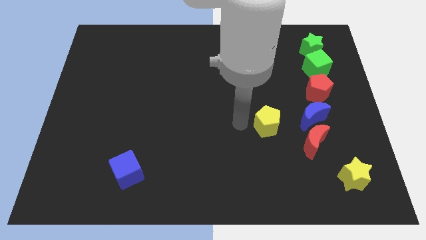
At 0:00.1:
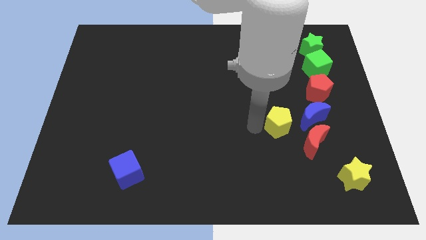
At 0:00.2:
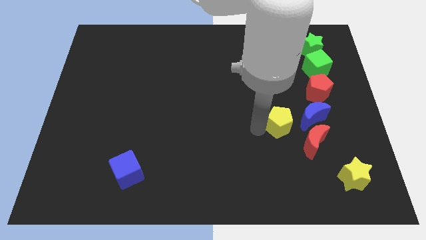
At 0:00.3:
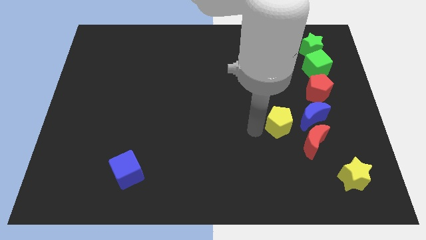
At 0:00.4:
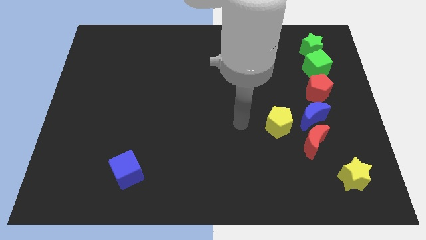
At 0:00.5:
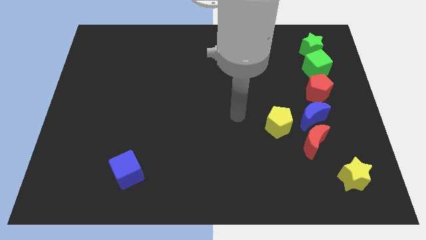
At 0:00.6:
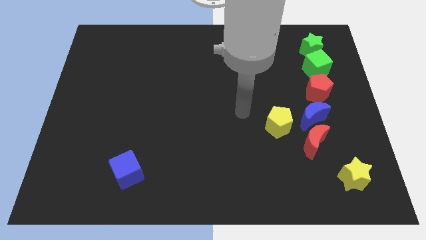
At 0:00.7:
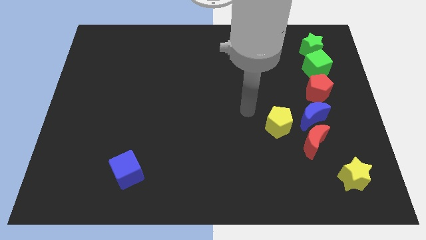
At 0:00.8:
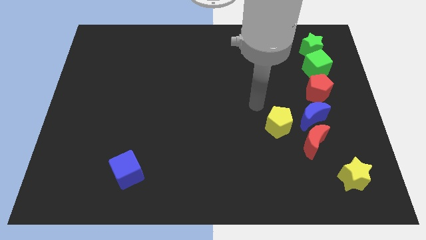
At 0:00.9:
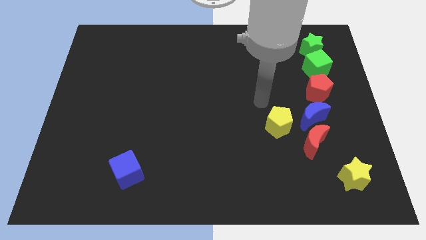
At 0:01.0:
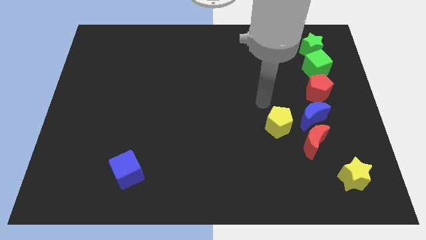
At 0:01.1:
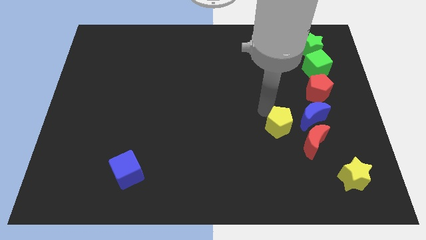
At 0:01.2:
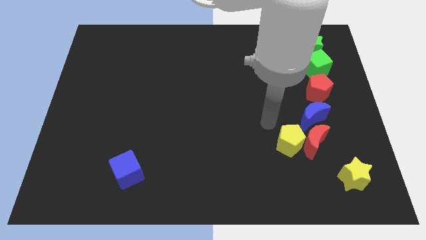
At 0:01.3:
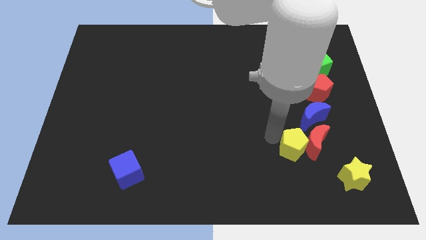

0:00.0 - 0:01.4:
move the yellow pentagon to the left of the red crescent

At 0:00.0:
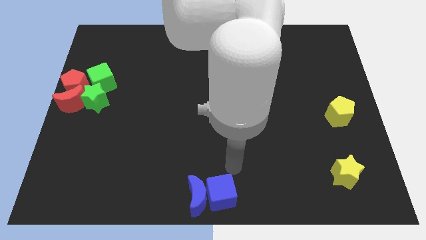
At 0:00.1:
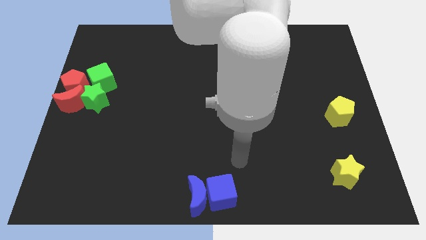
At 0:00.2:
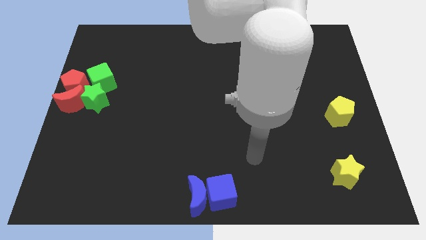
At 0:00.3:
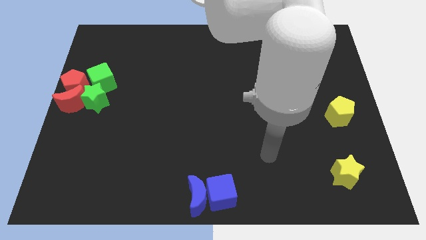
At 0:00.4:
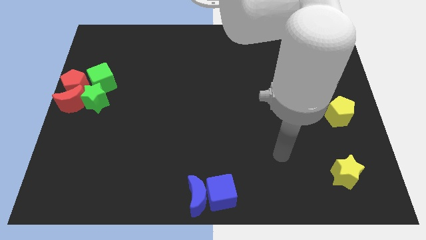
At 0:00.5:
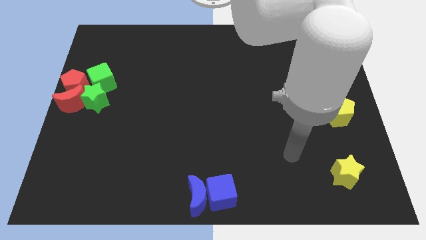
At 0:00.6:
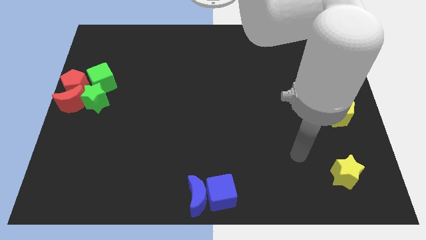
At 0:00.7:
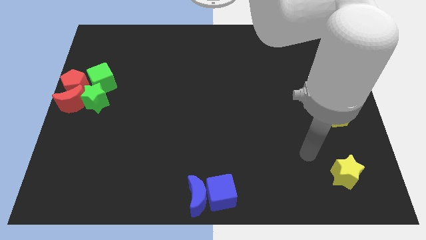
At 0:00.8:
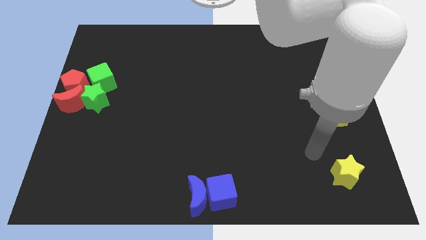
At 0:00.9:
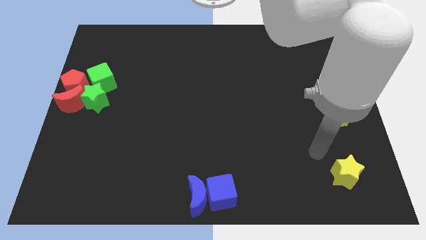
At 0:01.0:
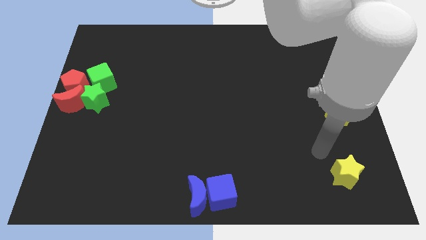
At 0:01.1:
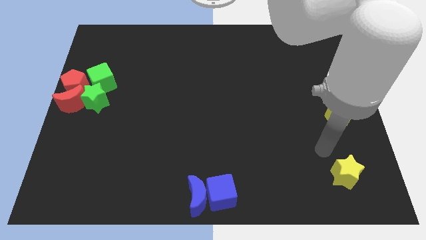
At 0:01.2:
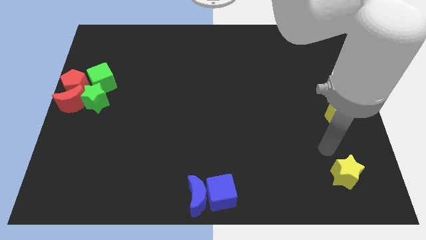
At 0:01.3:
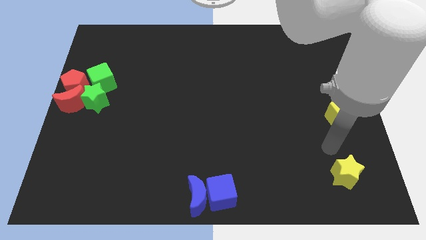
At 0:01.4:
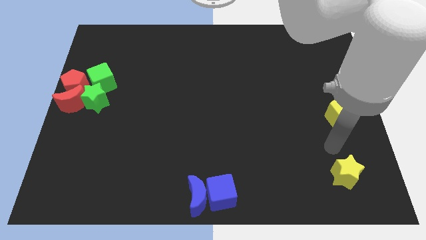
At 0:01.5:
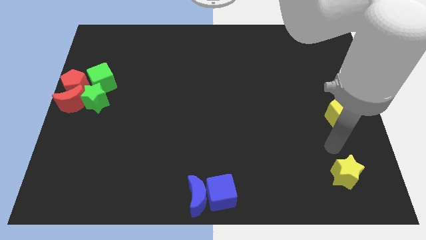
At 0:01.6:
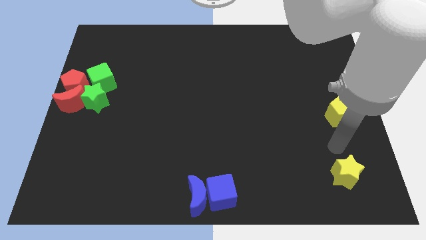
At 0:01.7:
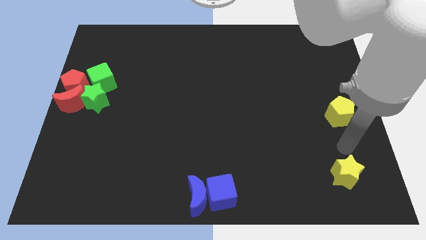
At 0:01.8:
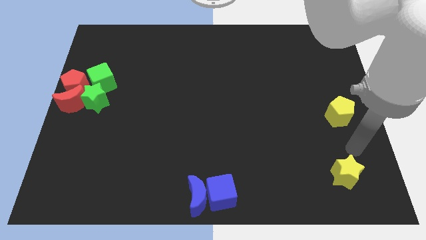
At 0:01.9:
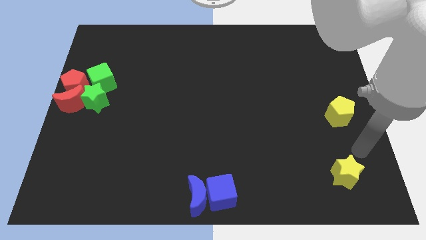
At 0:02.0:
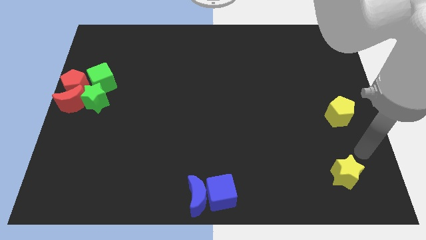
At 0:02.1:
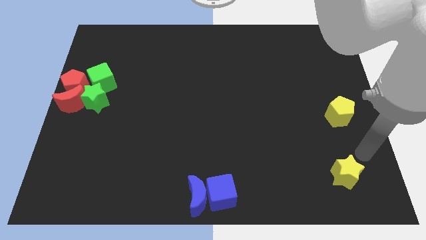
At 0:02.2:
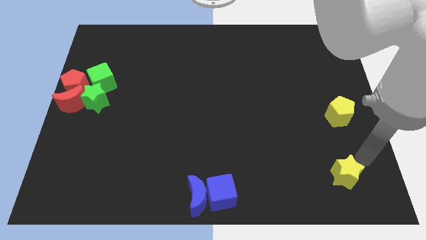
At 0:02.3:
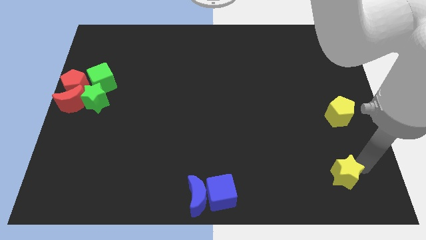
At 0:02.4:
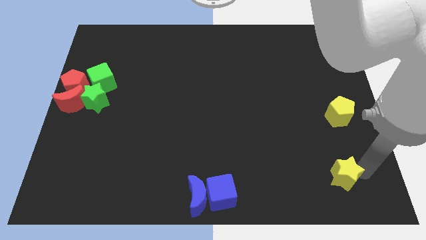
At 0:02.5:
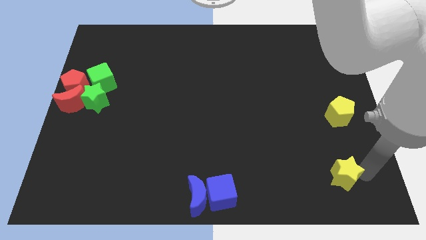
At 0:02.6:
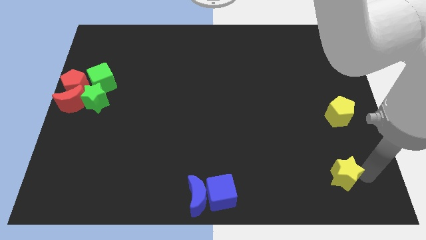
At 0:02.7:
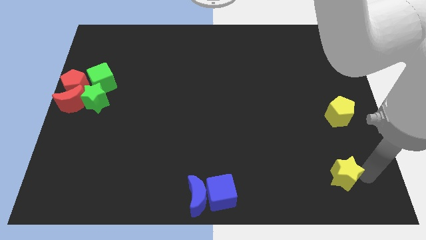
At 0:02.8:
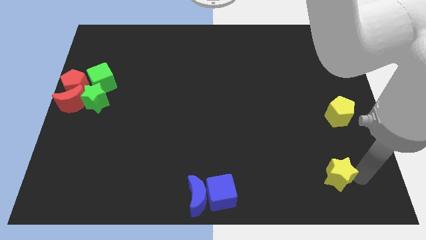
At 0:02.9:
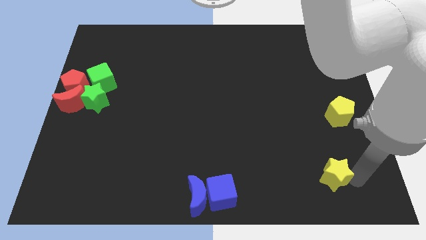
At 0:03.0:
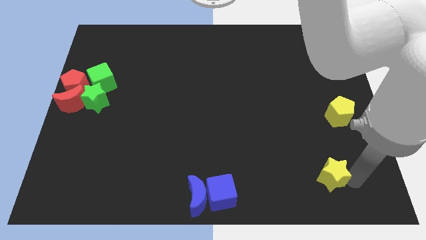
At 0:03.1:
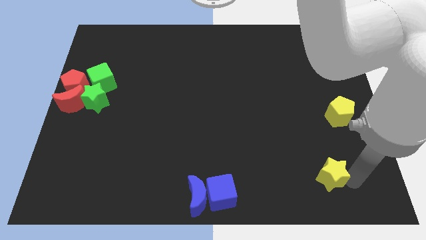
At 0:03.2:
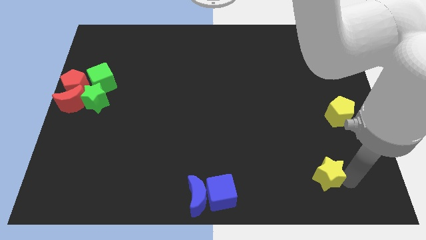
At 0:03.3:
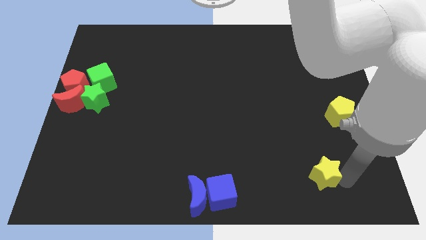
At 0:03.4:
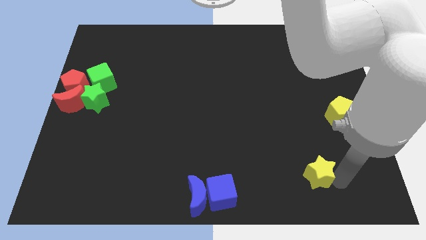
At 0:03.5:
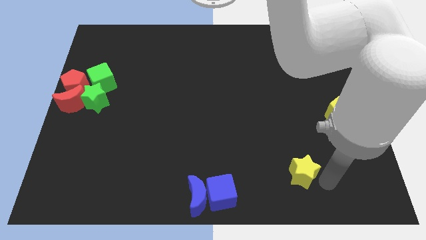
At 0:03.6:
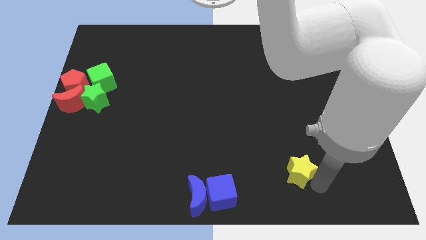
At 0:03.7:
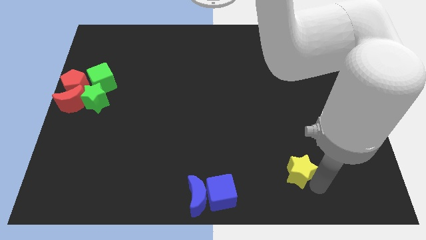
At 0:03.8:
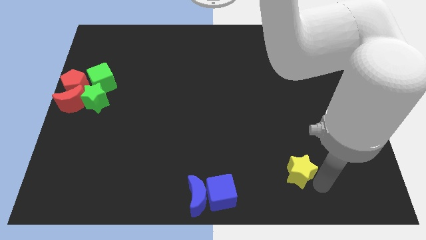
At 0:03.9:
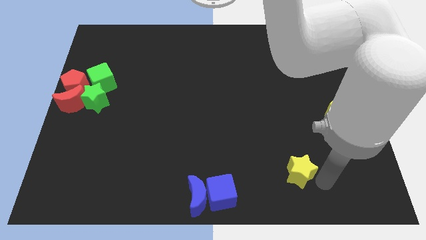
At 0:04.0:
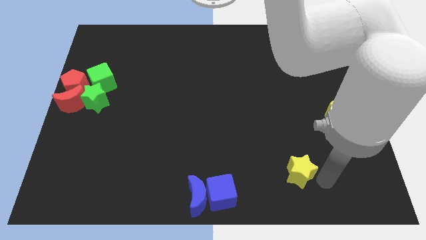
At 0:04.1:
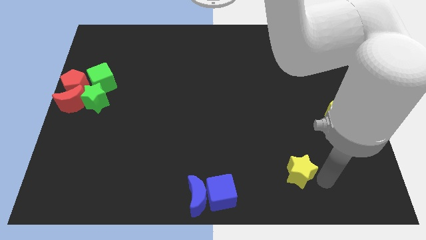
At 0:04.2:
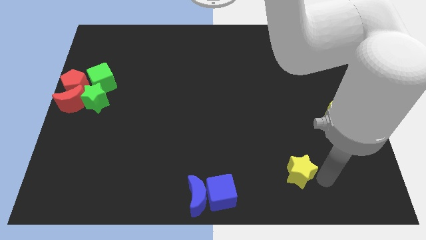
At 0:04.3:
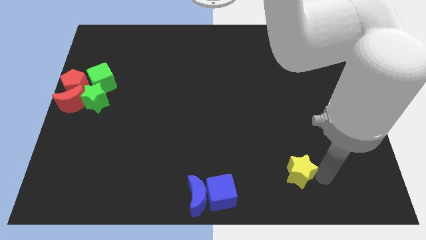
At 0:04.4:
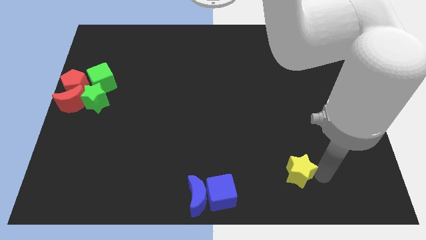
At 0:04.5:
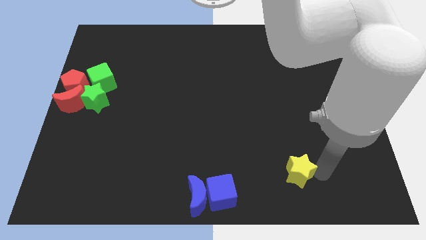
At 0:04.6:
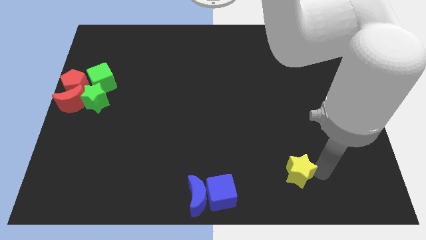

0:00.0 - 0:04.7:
slide the yellow star towards the right side of the blue cube

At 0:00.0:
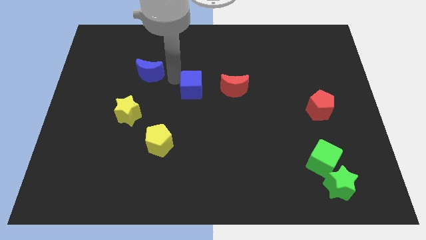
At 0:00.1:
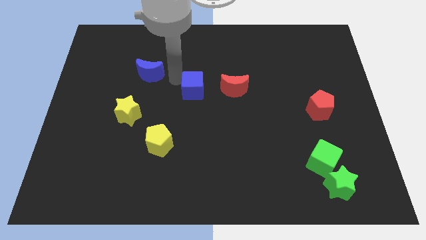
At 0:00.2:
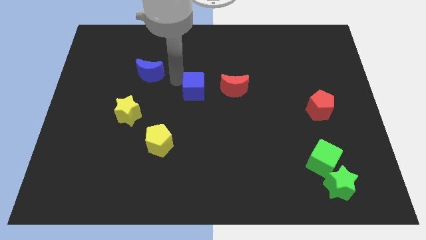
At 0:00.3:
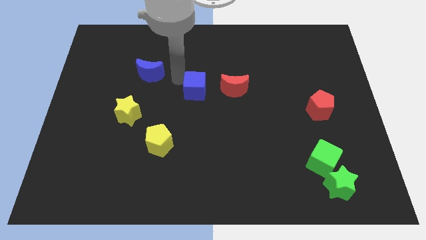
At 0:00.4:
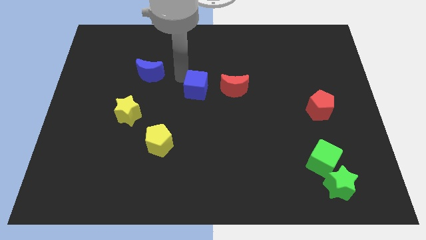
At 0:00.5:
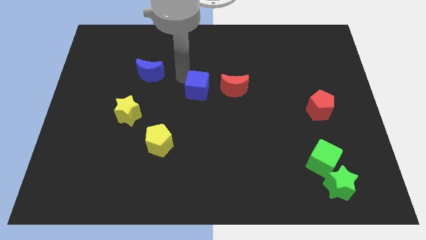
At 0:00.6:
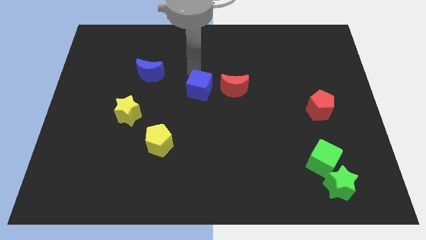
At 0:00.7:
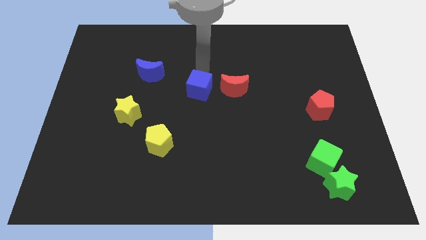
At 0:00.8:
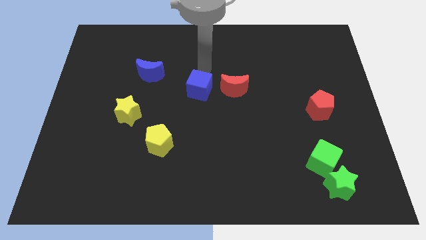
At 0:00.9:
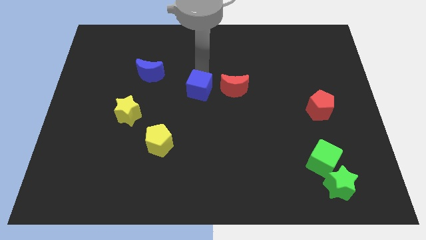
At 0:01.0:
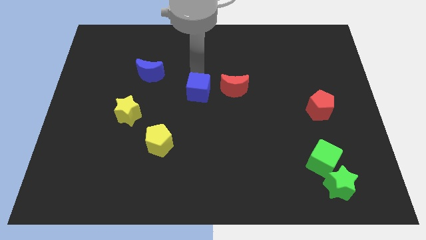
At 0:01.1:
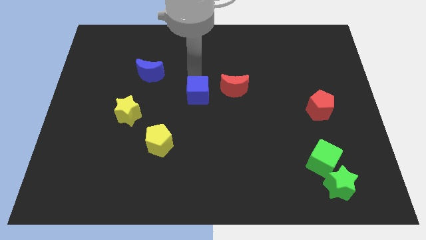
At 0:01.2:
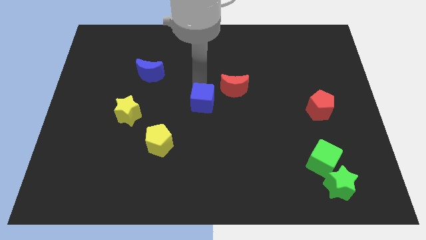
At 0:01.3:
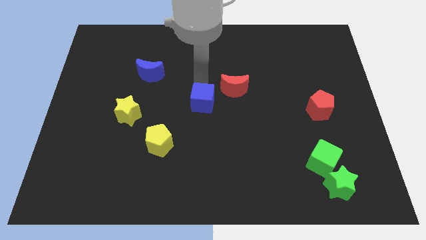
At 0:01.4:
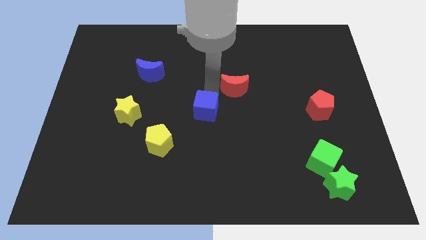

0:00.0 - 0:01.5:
move the blue cube towards the center of the board

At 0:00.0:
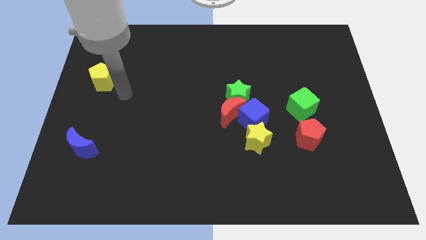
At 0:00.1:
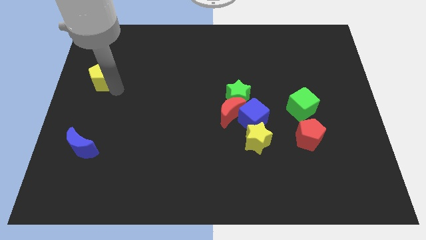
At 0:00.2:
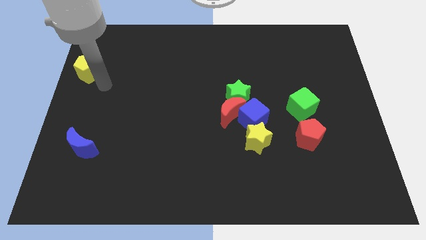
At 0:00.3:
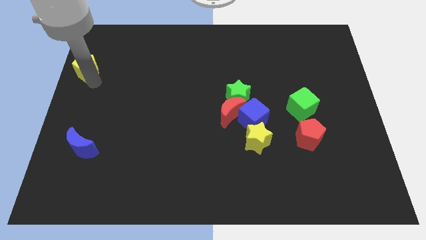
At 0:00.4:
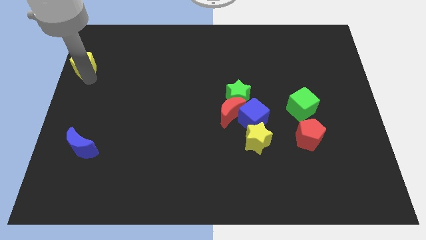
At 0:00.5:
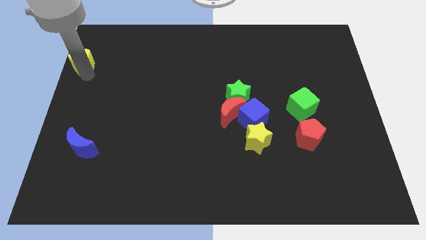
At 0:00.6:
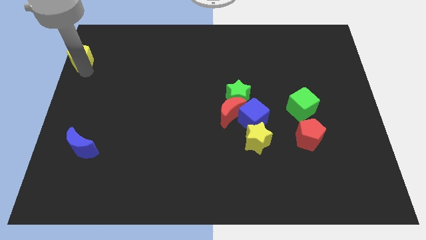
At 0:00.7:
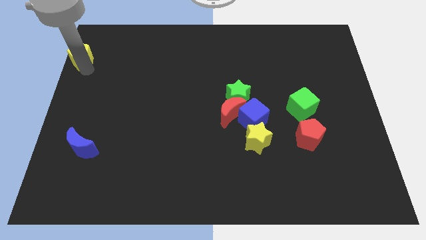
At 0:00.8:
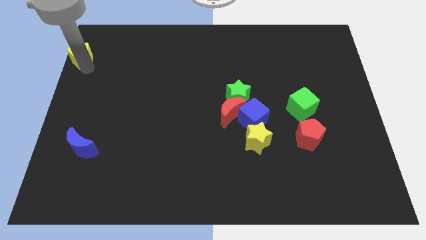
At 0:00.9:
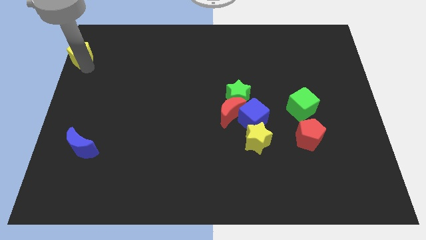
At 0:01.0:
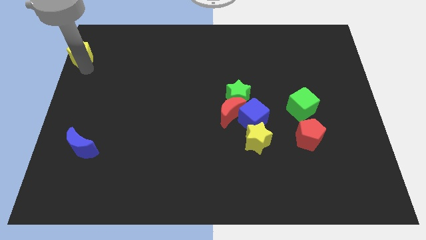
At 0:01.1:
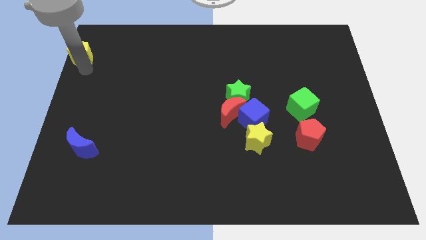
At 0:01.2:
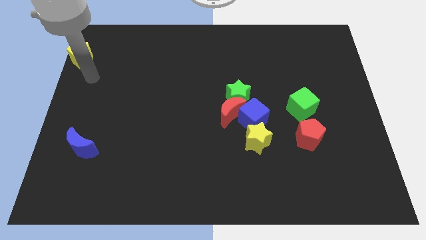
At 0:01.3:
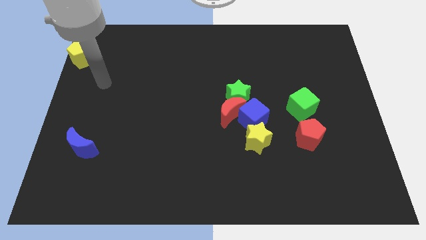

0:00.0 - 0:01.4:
slightly drag the yellow pentagon to the top left of the board
